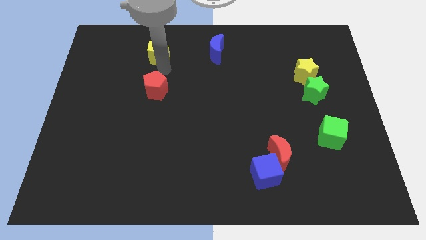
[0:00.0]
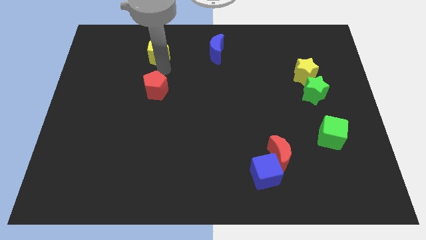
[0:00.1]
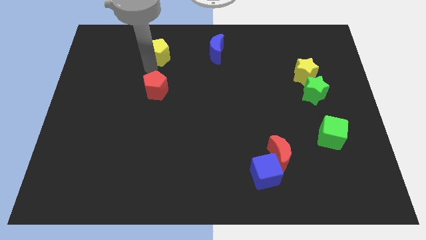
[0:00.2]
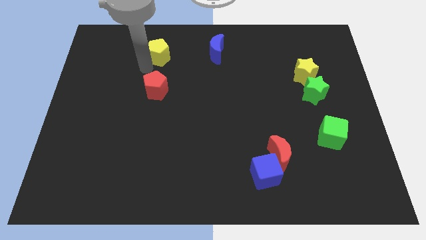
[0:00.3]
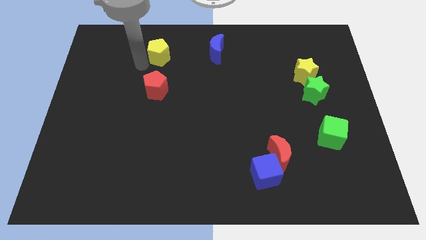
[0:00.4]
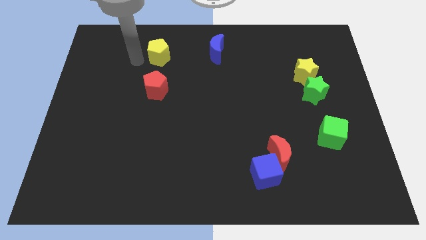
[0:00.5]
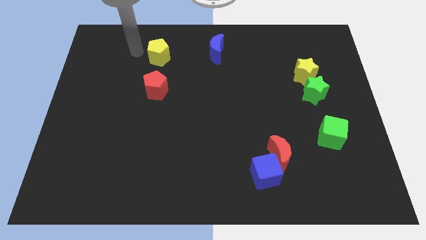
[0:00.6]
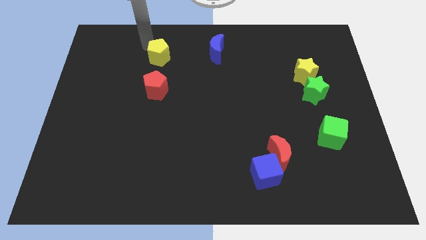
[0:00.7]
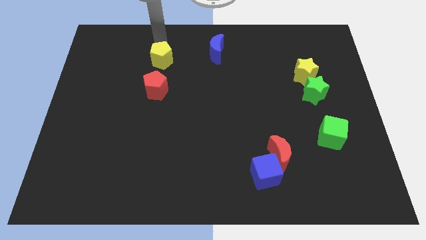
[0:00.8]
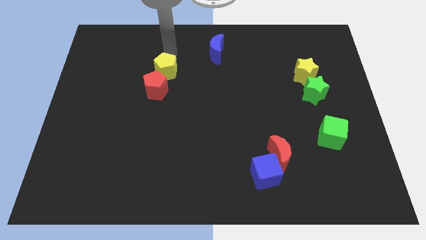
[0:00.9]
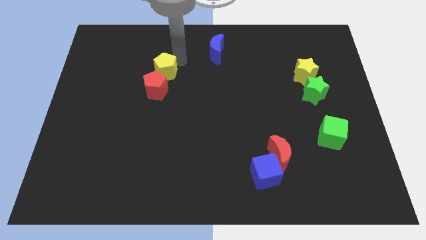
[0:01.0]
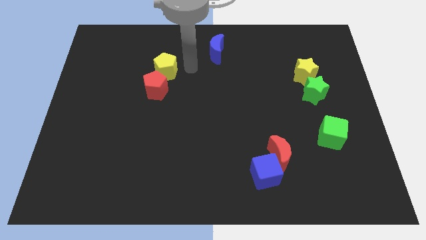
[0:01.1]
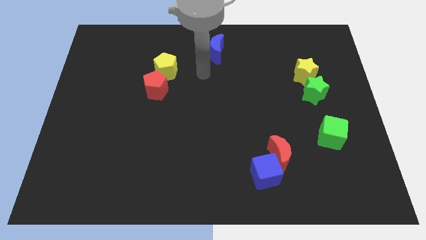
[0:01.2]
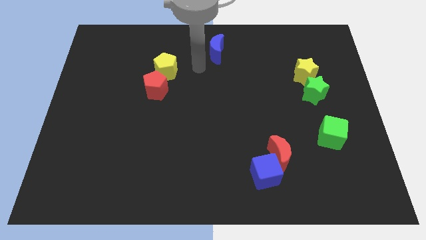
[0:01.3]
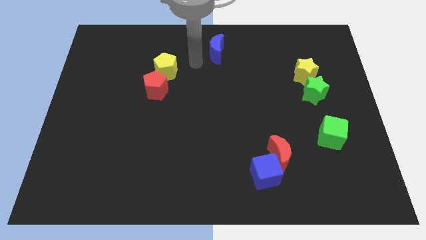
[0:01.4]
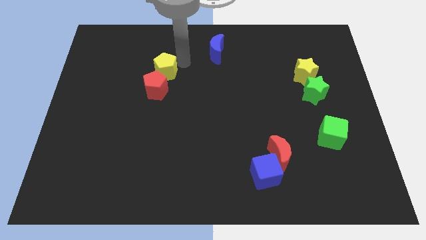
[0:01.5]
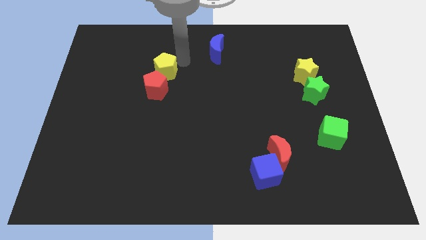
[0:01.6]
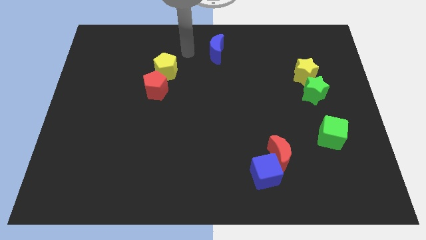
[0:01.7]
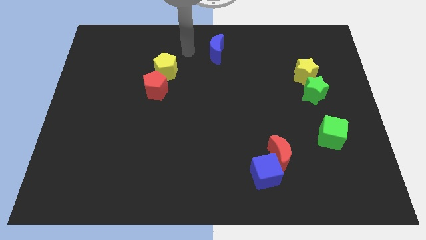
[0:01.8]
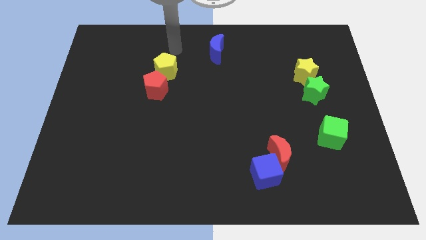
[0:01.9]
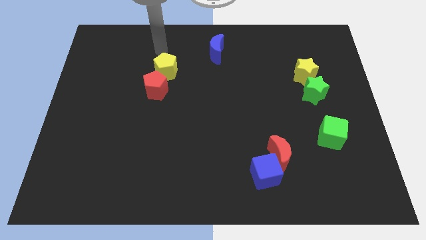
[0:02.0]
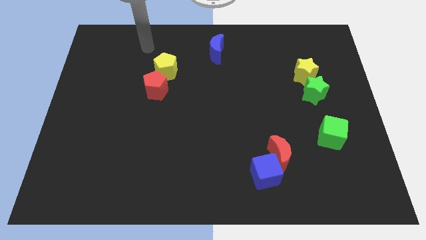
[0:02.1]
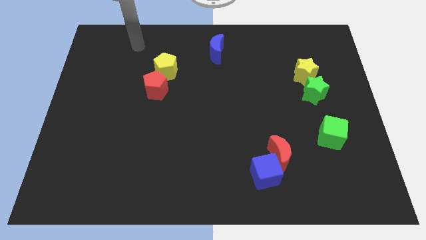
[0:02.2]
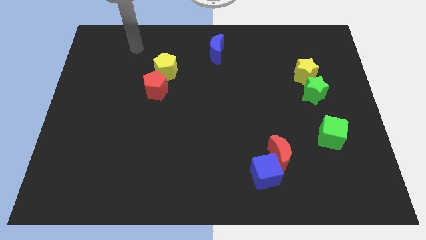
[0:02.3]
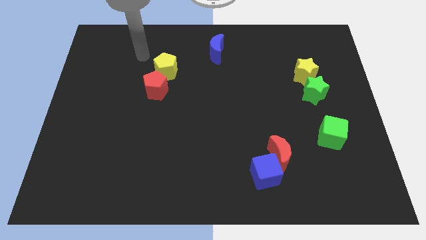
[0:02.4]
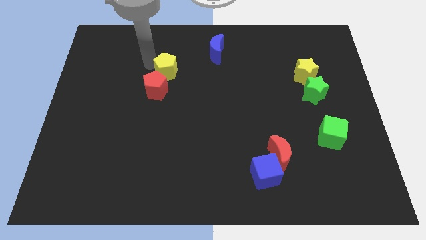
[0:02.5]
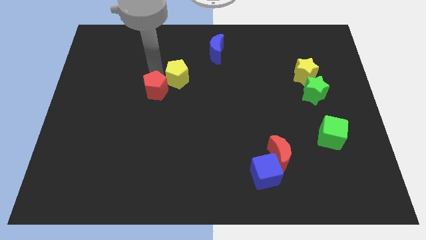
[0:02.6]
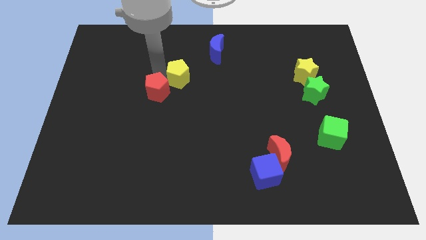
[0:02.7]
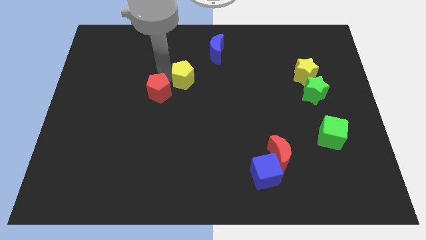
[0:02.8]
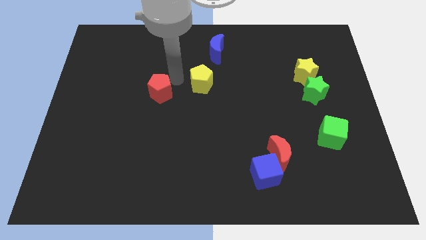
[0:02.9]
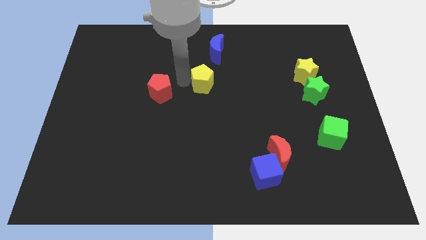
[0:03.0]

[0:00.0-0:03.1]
push the yellow pentagon into the red pentagon

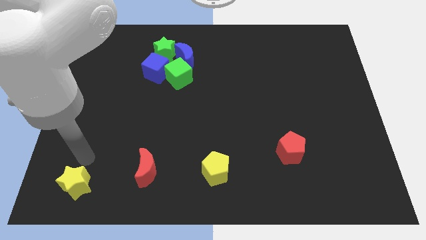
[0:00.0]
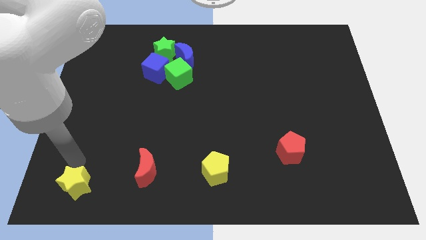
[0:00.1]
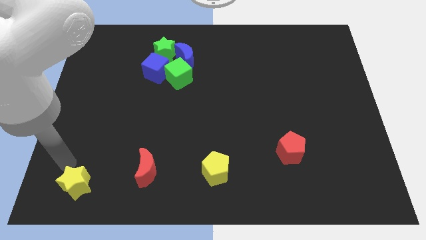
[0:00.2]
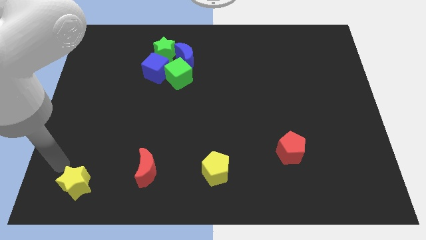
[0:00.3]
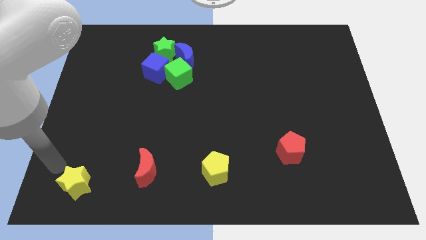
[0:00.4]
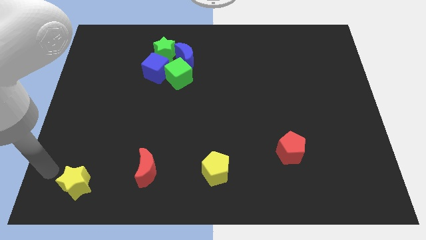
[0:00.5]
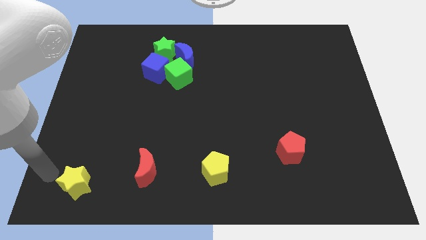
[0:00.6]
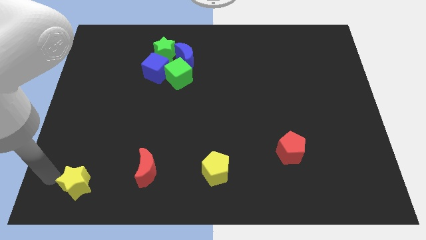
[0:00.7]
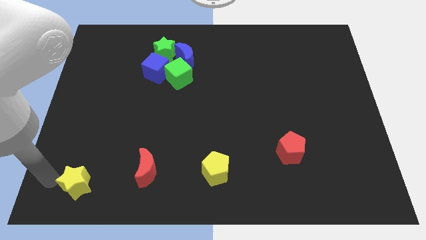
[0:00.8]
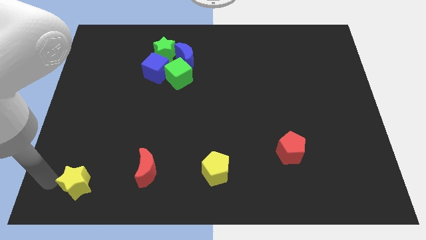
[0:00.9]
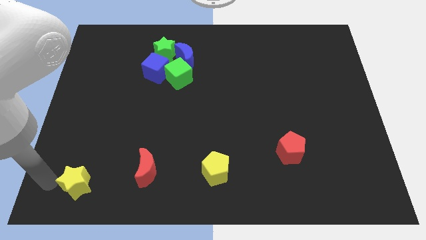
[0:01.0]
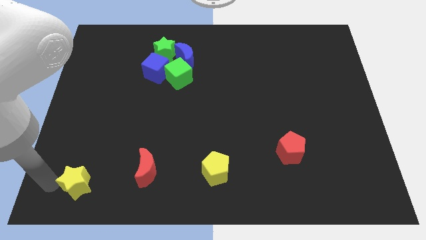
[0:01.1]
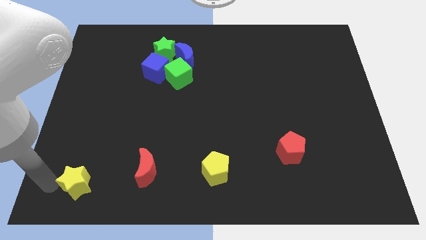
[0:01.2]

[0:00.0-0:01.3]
move close to the yellow star

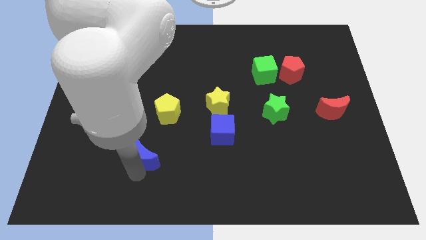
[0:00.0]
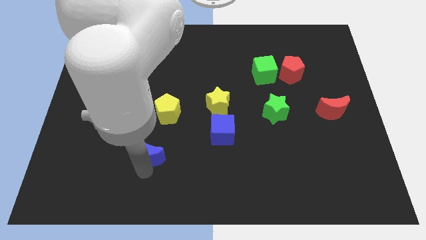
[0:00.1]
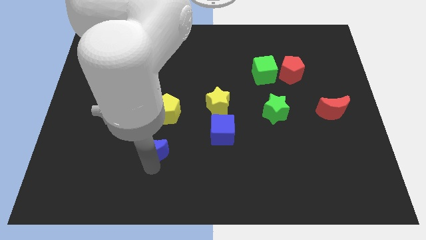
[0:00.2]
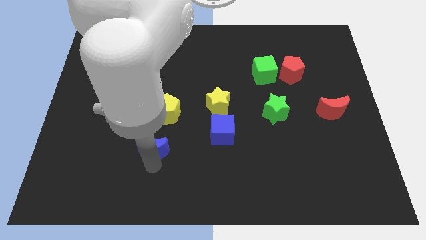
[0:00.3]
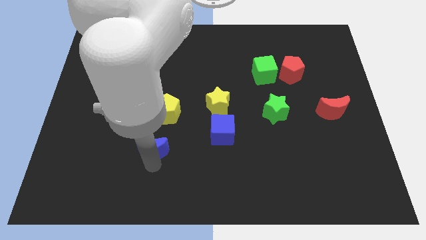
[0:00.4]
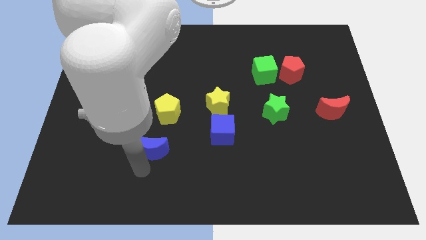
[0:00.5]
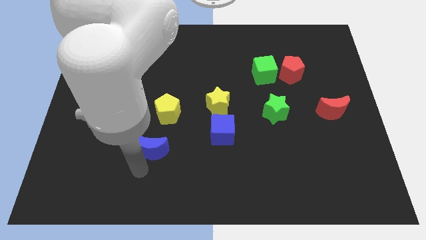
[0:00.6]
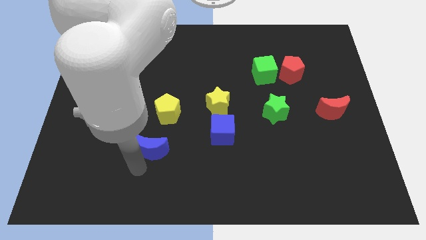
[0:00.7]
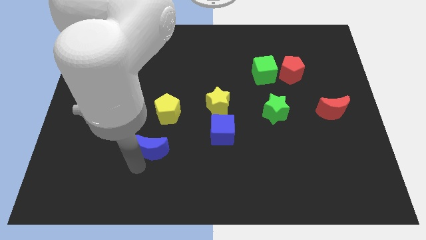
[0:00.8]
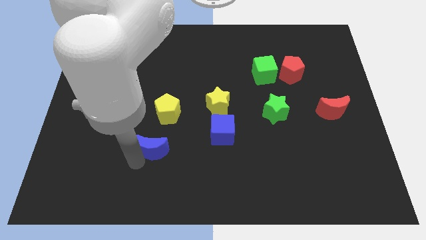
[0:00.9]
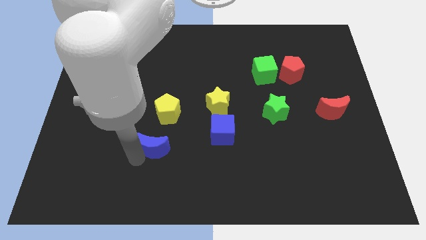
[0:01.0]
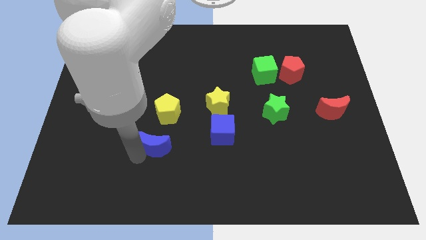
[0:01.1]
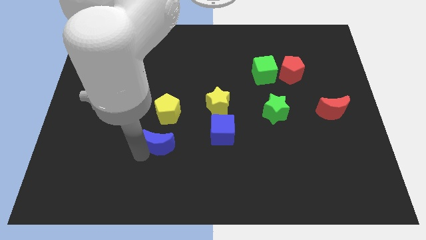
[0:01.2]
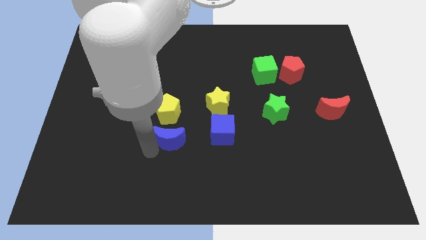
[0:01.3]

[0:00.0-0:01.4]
place the blue moon below the yellow pentagon

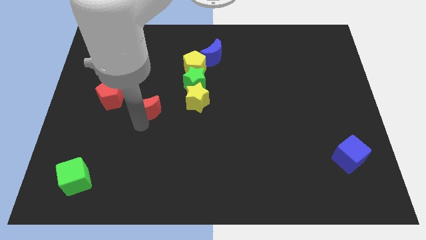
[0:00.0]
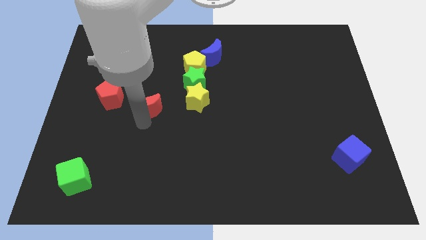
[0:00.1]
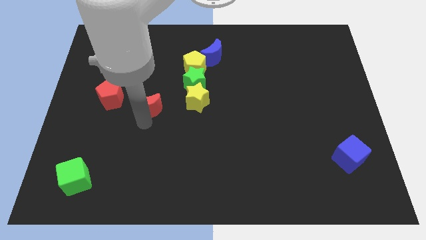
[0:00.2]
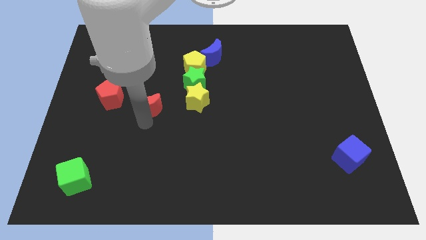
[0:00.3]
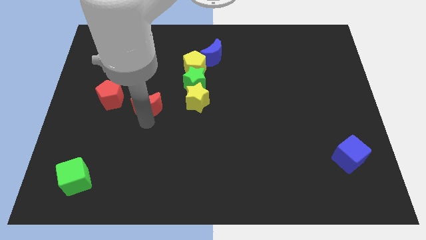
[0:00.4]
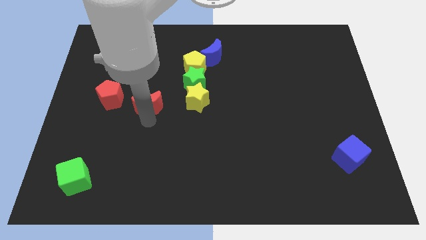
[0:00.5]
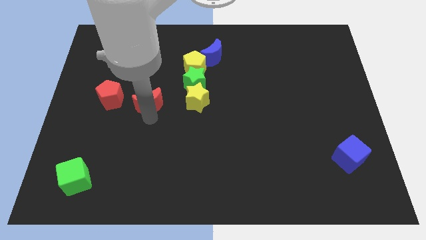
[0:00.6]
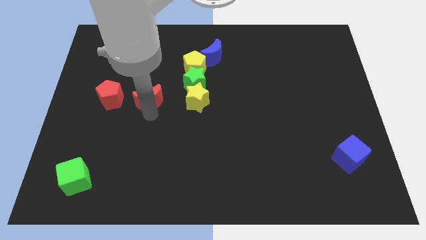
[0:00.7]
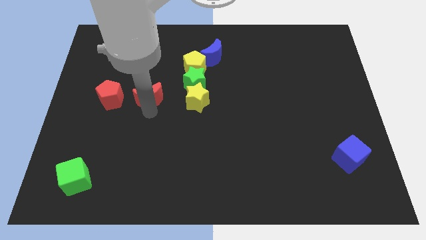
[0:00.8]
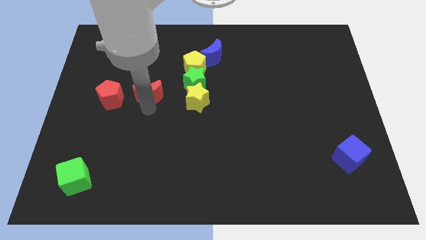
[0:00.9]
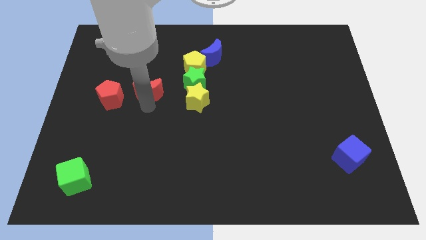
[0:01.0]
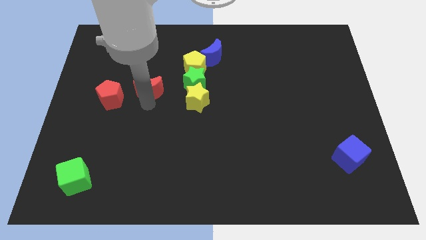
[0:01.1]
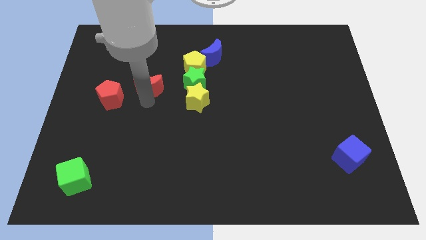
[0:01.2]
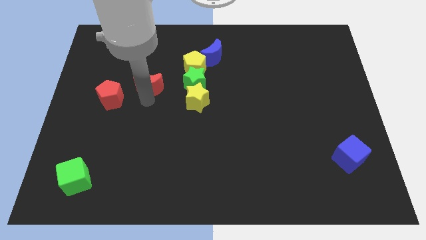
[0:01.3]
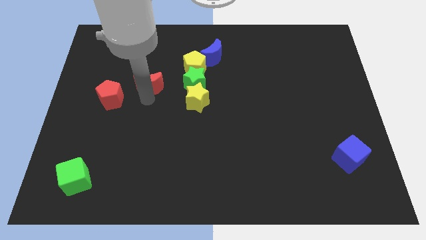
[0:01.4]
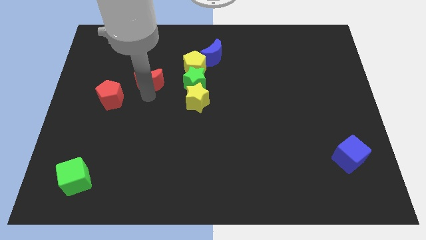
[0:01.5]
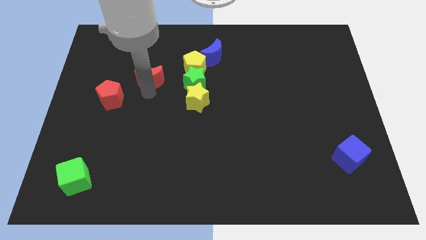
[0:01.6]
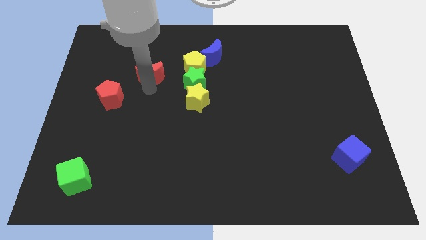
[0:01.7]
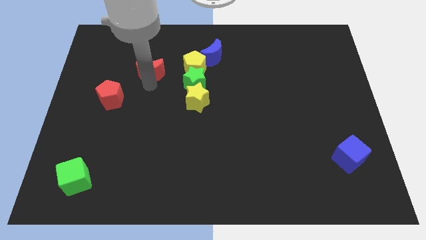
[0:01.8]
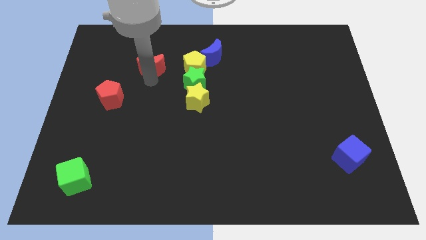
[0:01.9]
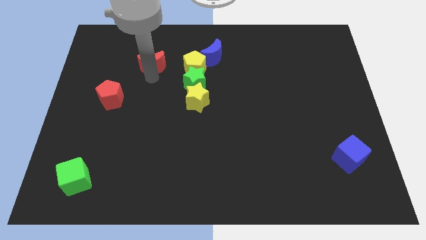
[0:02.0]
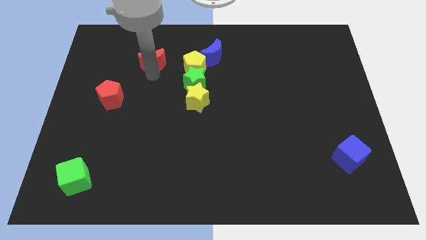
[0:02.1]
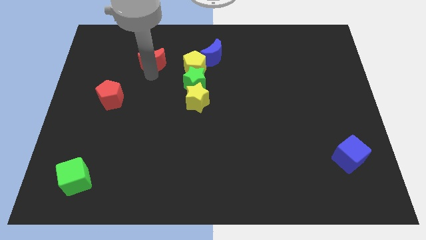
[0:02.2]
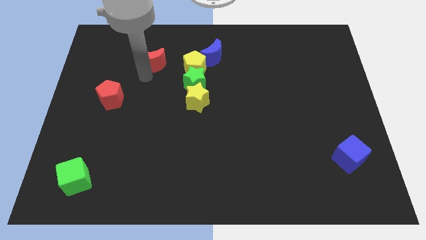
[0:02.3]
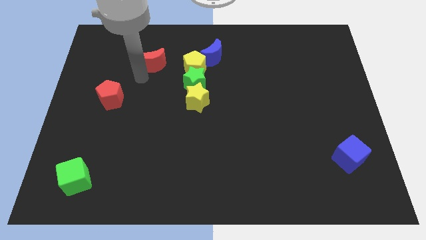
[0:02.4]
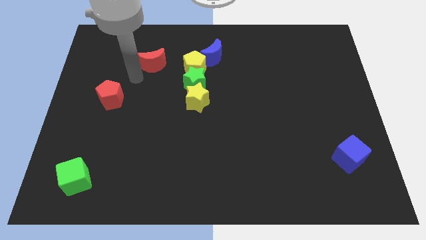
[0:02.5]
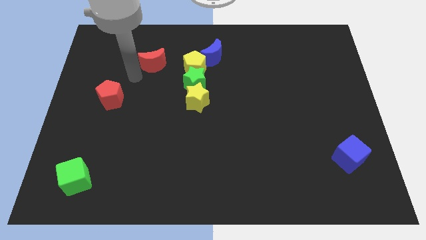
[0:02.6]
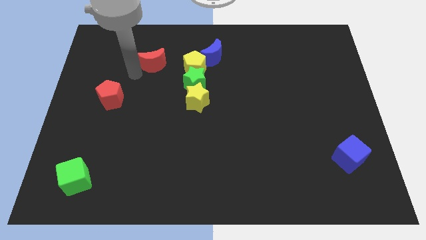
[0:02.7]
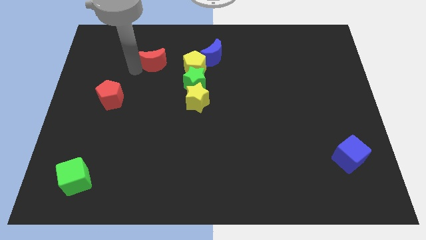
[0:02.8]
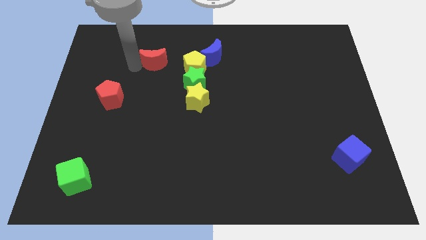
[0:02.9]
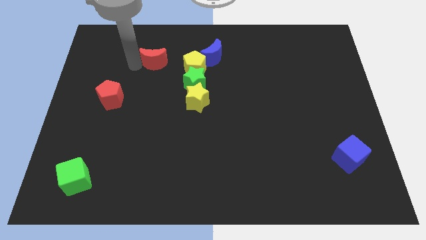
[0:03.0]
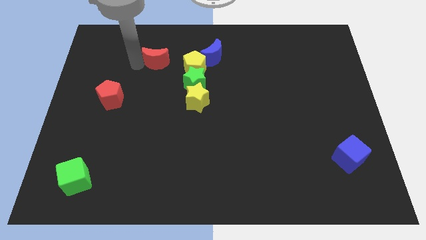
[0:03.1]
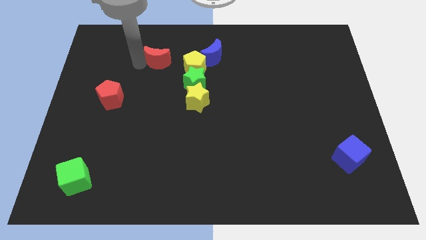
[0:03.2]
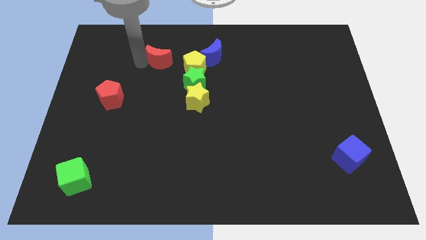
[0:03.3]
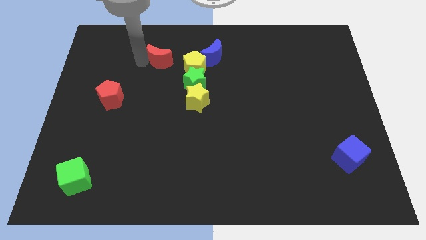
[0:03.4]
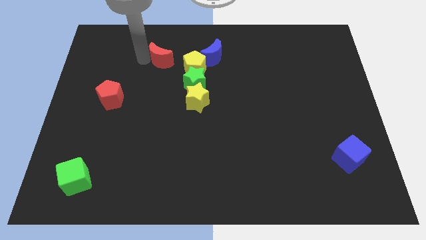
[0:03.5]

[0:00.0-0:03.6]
put red crescent daigonally to the red pentagon
